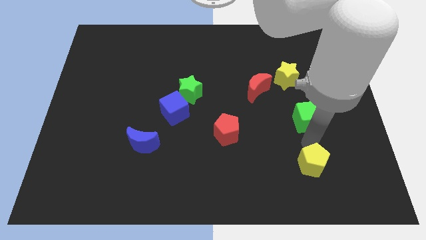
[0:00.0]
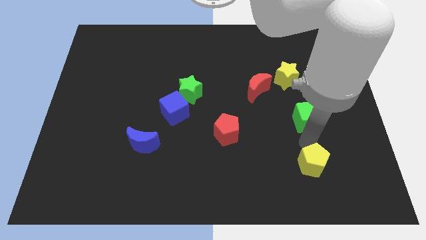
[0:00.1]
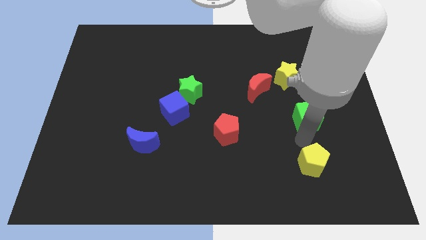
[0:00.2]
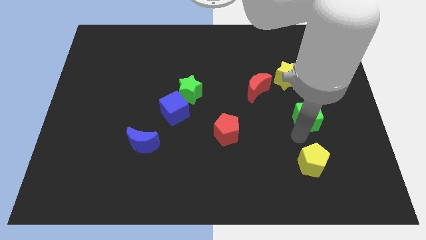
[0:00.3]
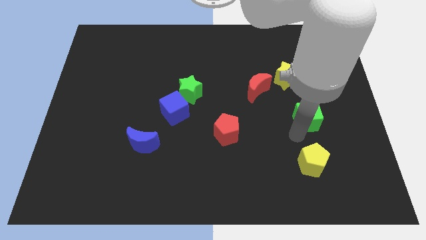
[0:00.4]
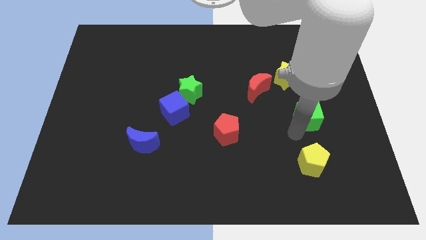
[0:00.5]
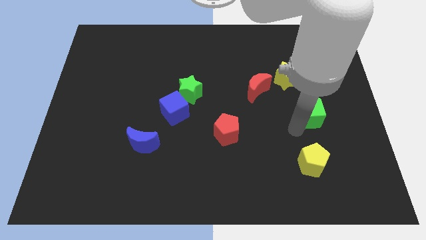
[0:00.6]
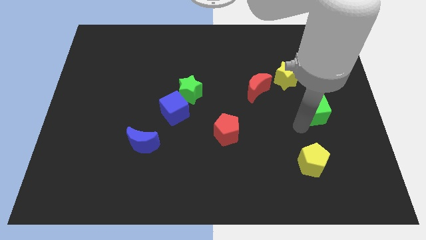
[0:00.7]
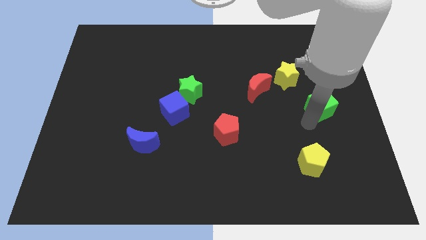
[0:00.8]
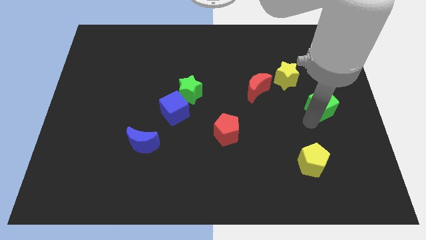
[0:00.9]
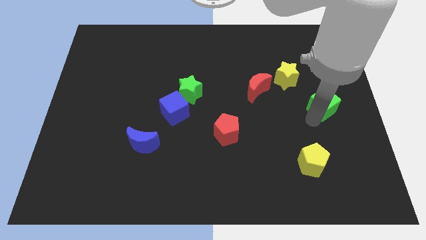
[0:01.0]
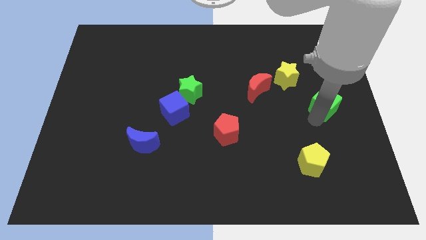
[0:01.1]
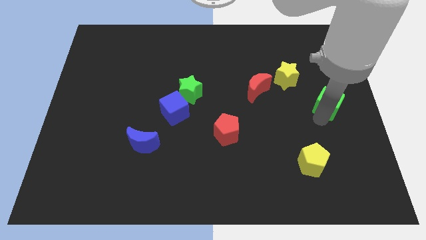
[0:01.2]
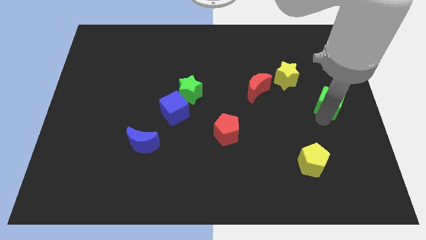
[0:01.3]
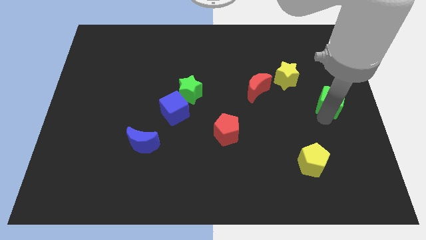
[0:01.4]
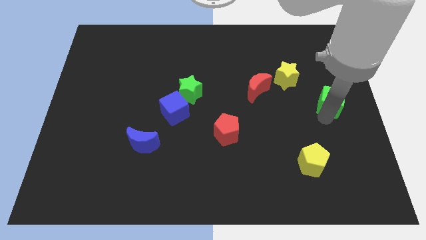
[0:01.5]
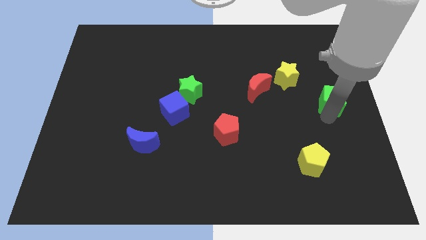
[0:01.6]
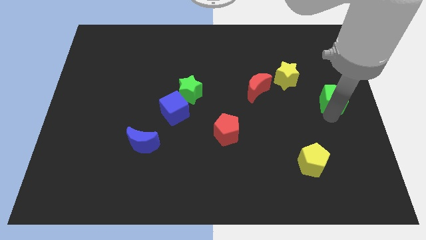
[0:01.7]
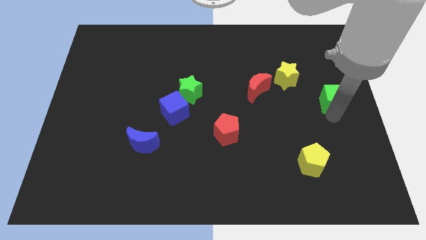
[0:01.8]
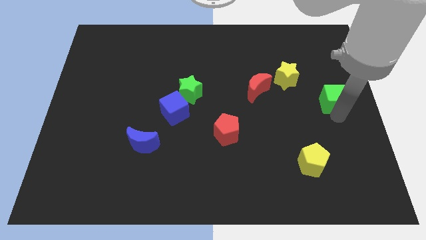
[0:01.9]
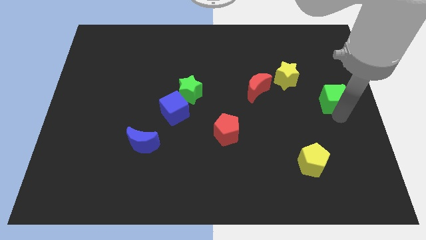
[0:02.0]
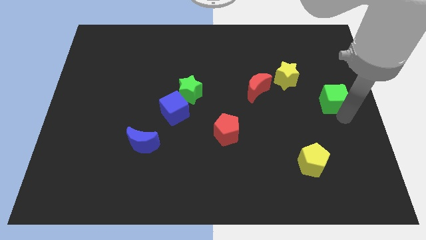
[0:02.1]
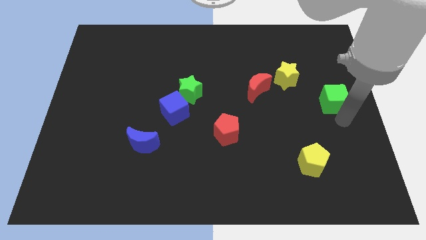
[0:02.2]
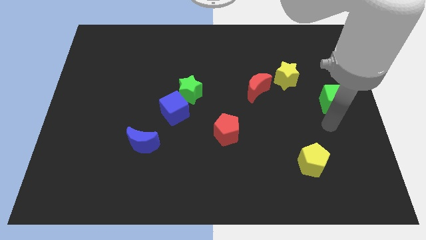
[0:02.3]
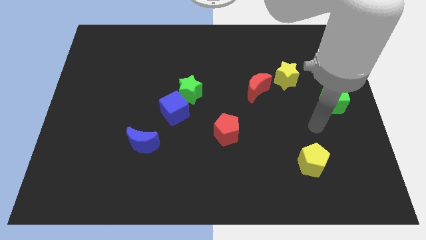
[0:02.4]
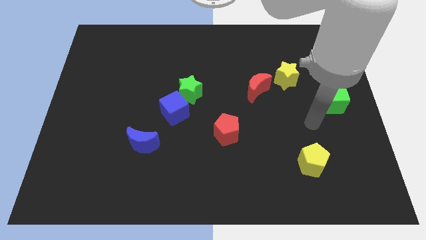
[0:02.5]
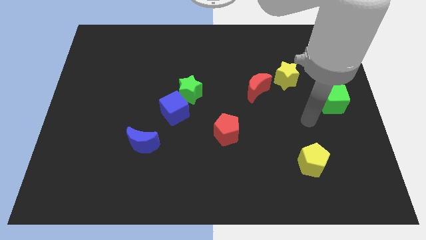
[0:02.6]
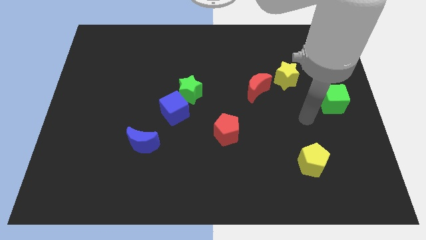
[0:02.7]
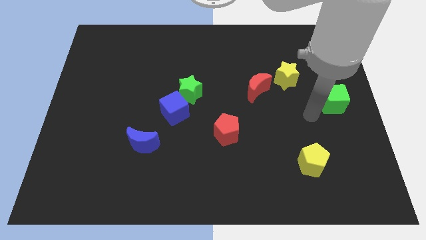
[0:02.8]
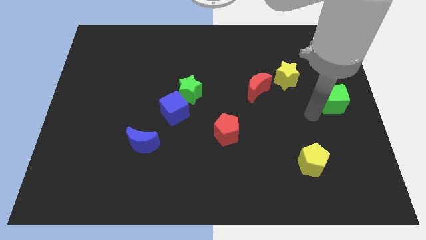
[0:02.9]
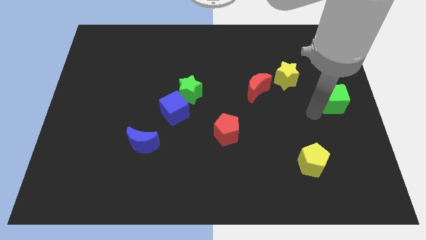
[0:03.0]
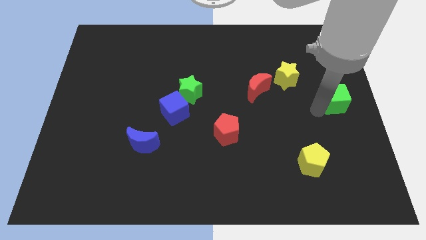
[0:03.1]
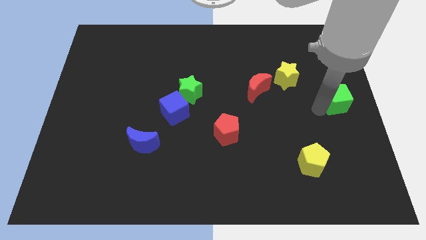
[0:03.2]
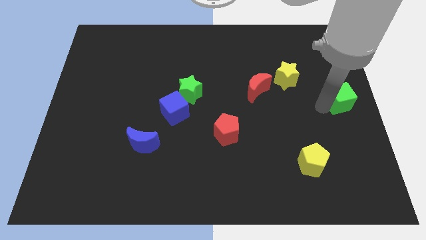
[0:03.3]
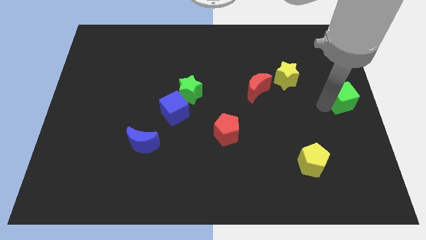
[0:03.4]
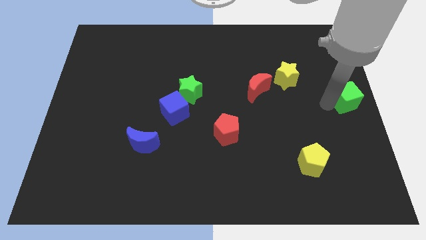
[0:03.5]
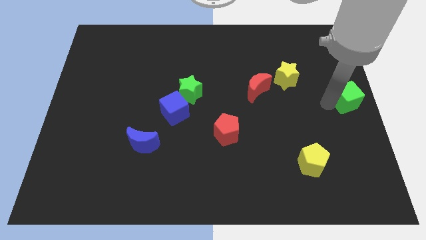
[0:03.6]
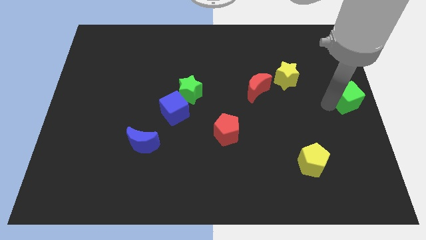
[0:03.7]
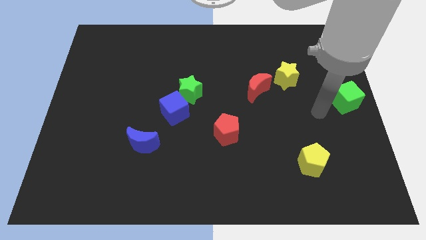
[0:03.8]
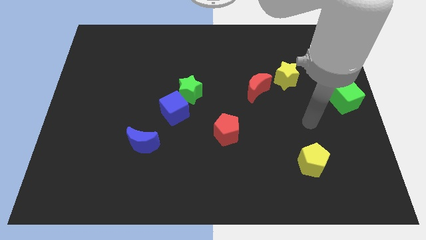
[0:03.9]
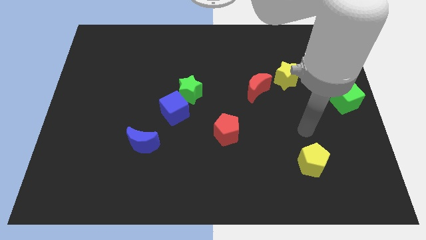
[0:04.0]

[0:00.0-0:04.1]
push green cube towards center right

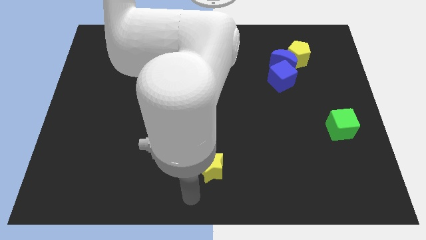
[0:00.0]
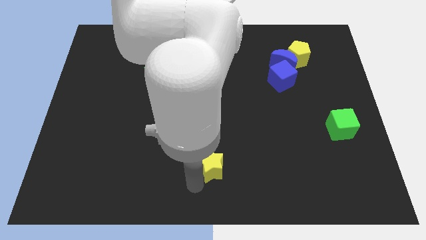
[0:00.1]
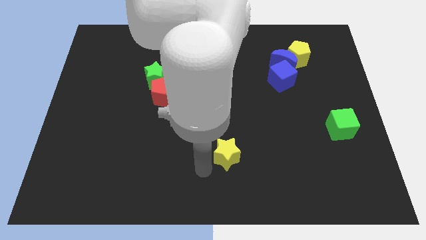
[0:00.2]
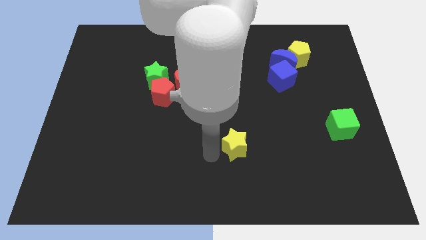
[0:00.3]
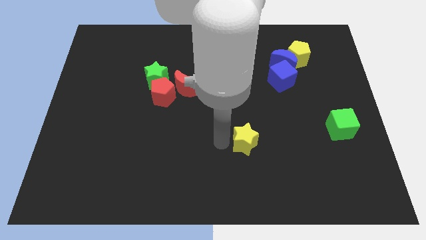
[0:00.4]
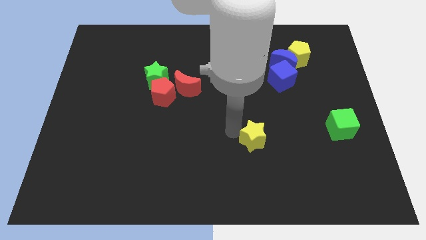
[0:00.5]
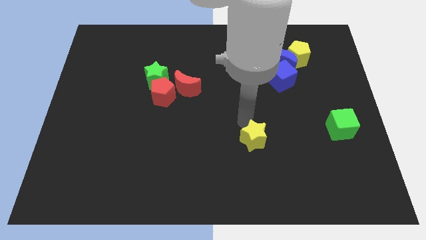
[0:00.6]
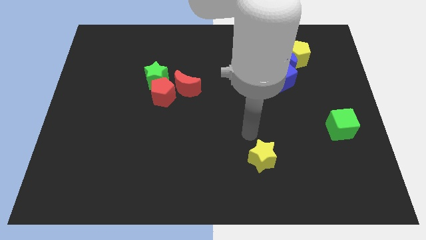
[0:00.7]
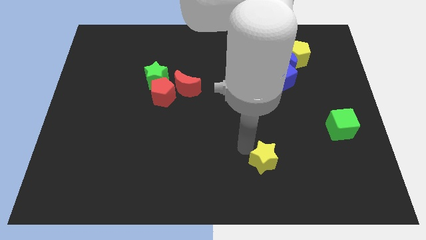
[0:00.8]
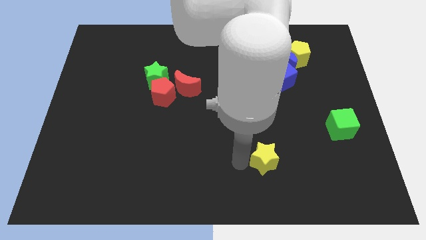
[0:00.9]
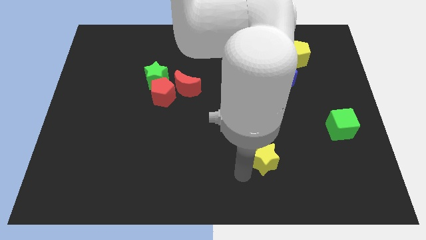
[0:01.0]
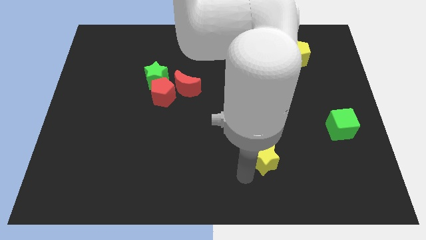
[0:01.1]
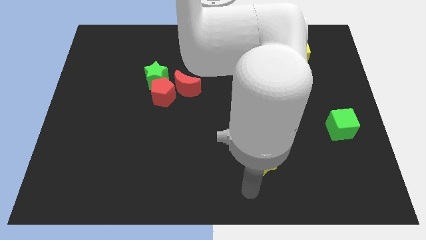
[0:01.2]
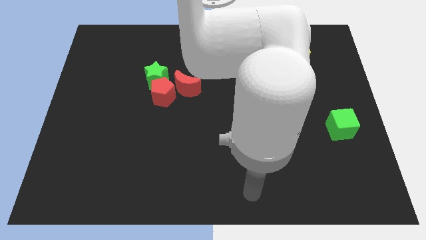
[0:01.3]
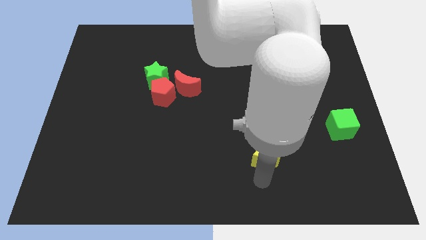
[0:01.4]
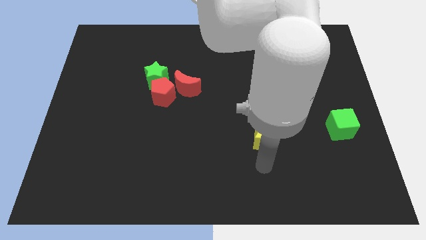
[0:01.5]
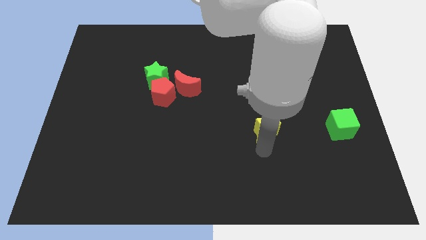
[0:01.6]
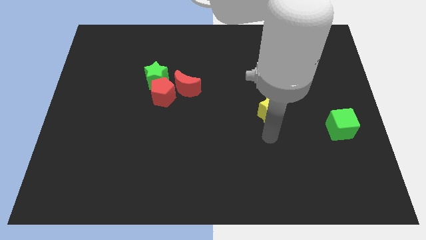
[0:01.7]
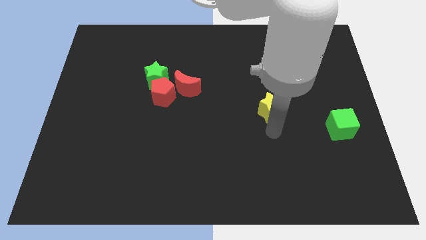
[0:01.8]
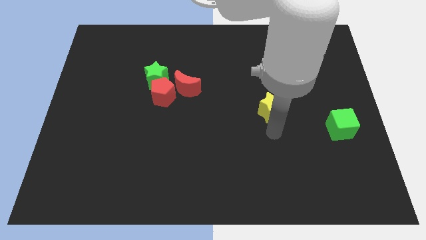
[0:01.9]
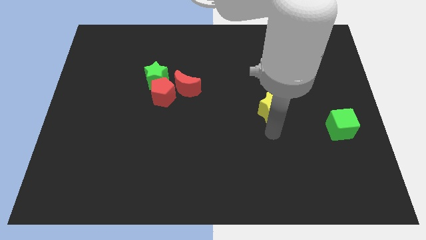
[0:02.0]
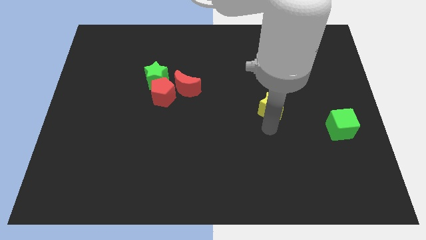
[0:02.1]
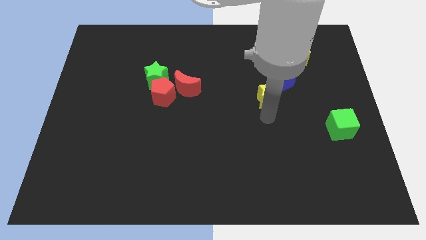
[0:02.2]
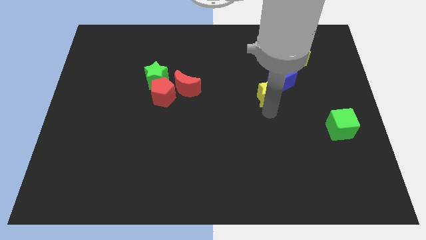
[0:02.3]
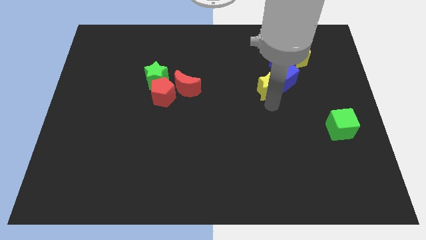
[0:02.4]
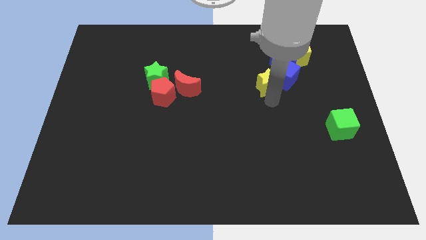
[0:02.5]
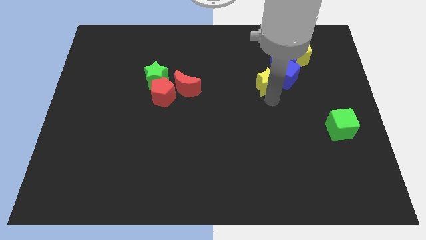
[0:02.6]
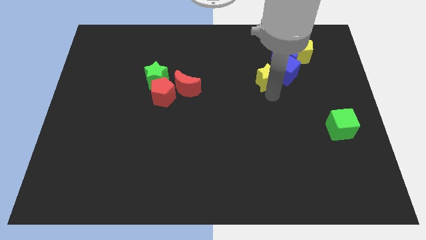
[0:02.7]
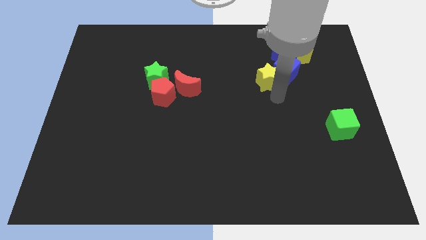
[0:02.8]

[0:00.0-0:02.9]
push the yellow star left to the blue cube

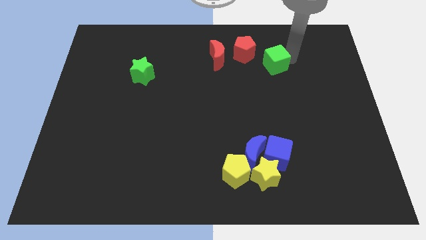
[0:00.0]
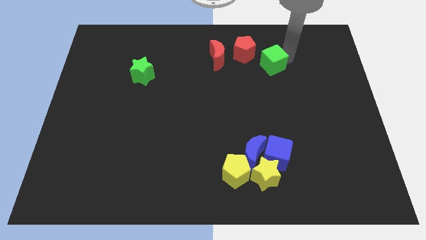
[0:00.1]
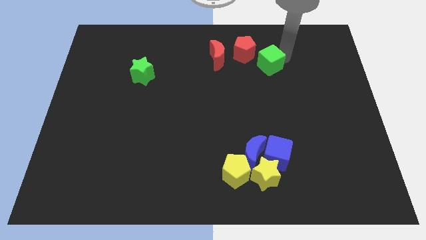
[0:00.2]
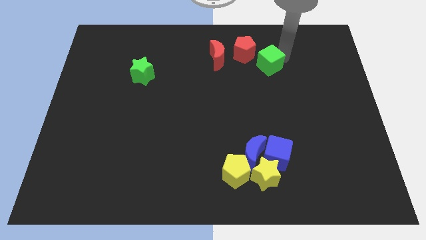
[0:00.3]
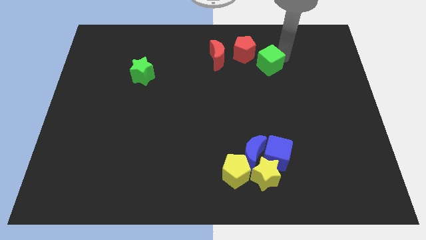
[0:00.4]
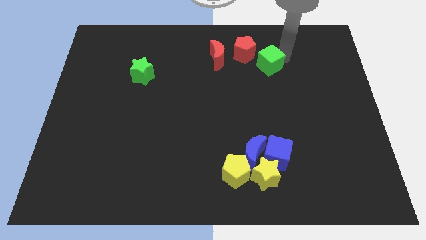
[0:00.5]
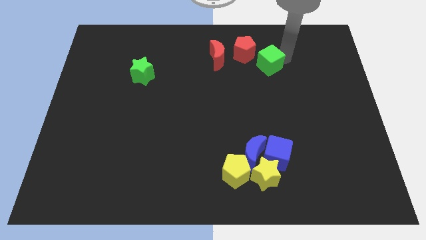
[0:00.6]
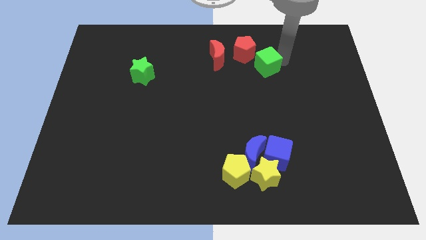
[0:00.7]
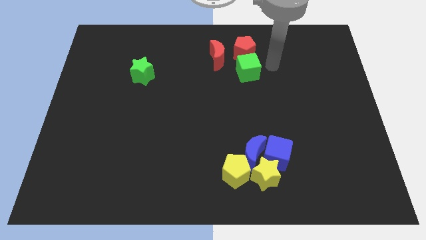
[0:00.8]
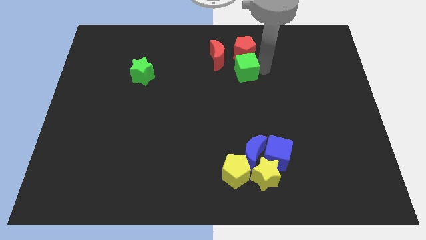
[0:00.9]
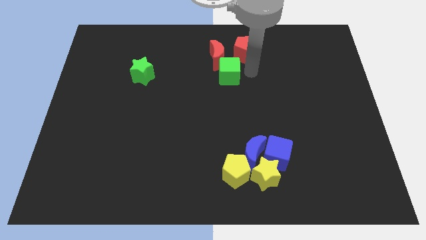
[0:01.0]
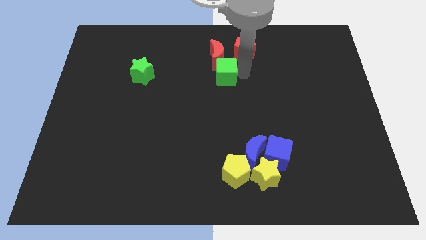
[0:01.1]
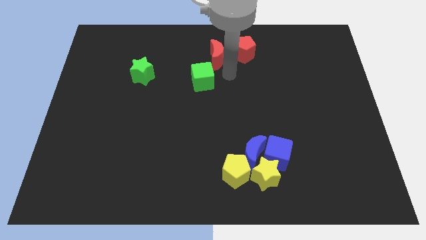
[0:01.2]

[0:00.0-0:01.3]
move the green cube to the bottom of the red crescent

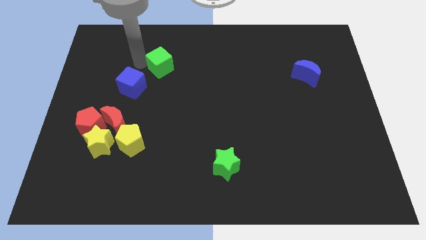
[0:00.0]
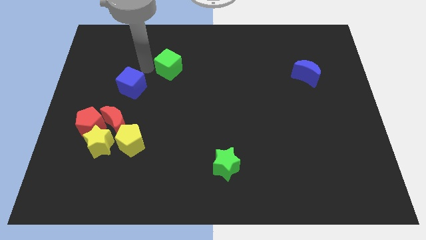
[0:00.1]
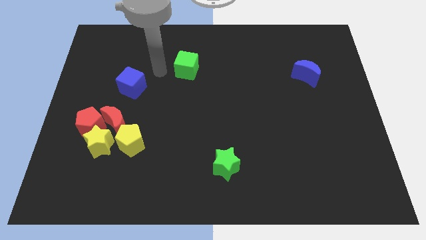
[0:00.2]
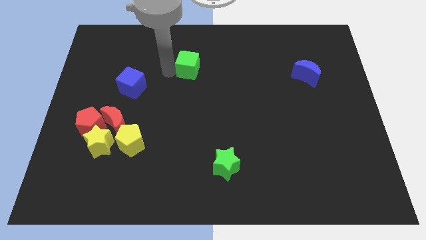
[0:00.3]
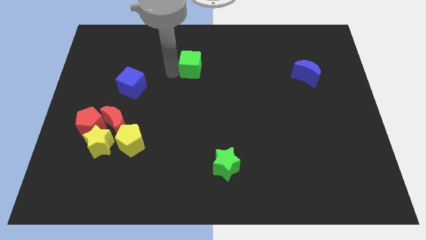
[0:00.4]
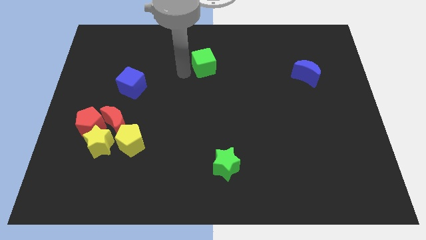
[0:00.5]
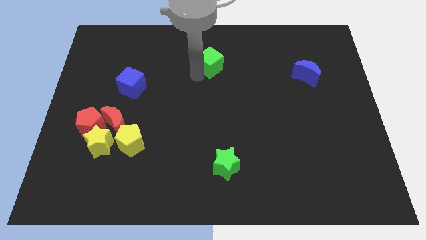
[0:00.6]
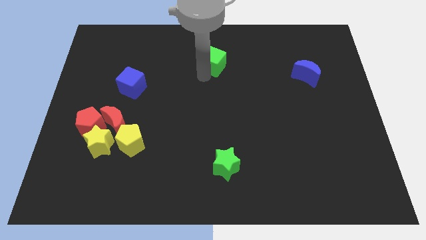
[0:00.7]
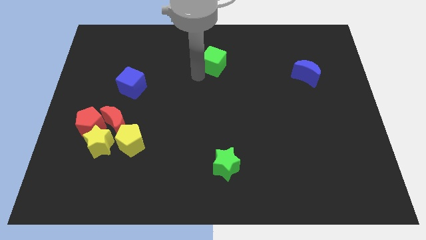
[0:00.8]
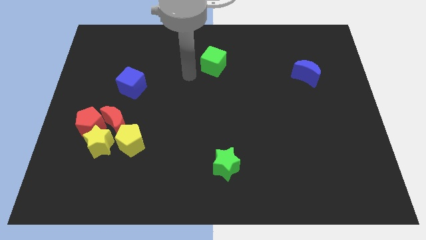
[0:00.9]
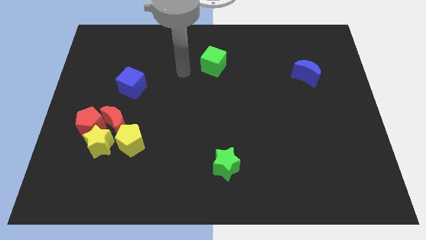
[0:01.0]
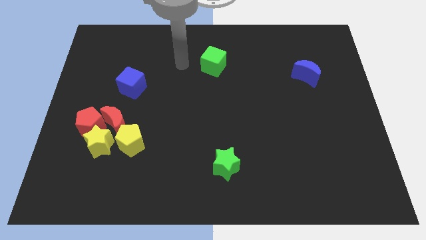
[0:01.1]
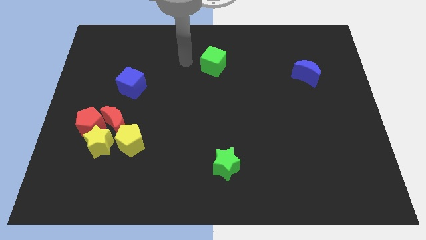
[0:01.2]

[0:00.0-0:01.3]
move the green cube to the right of the board
